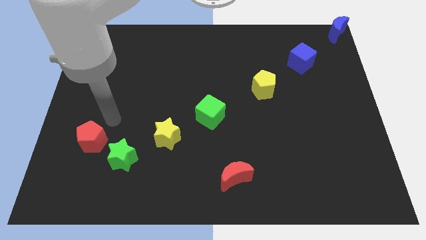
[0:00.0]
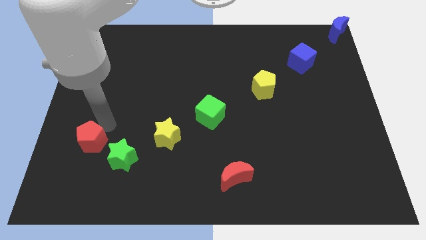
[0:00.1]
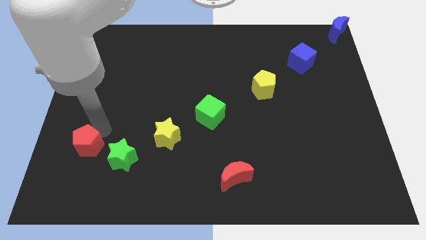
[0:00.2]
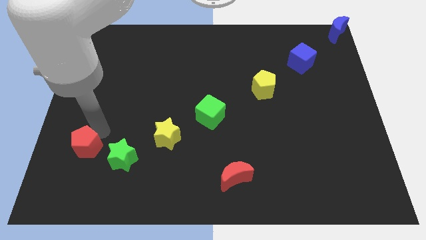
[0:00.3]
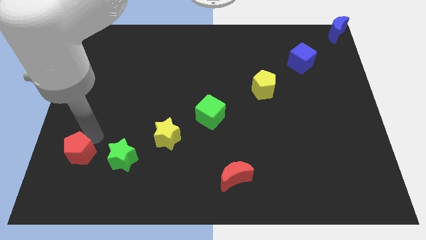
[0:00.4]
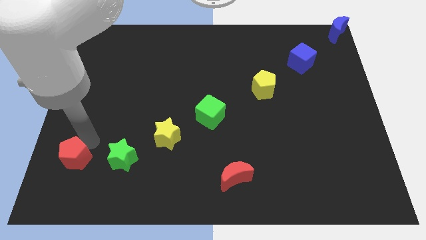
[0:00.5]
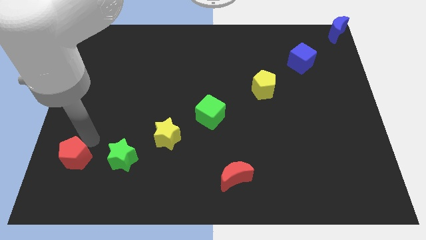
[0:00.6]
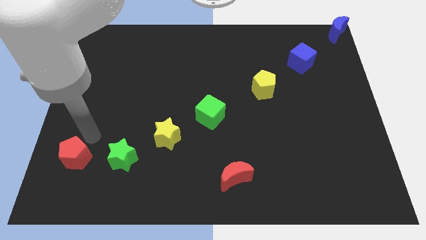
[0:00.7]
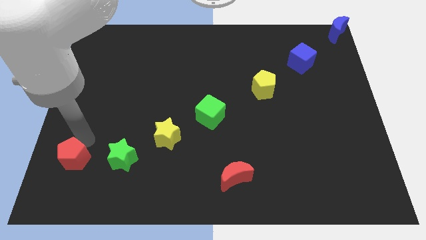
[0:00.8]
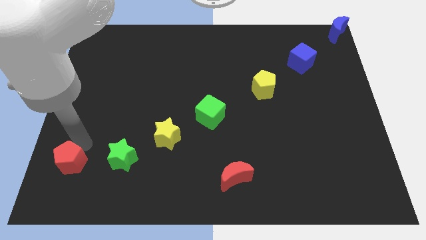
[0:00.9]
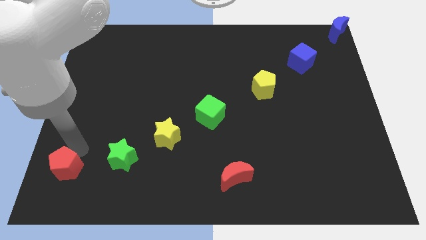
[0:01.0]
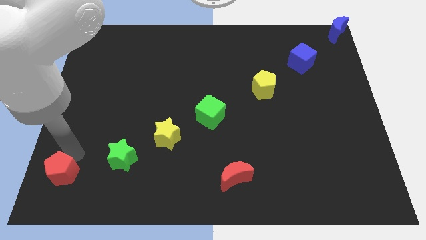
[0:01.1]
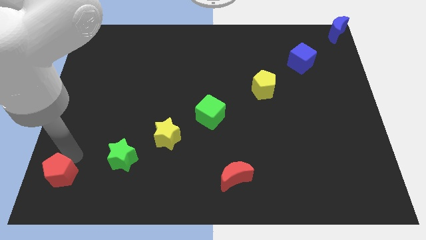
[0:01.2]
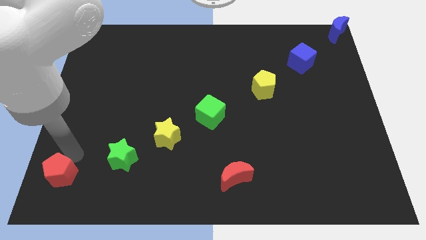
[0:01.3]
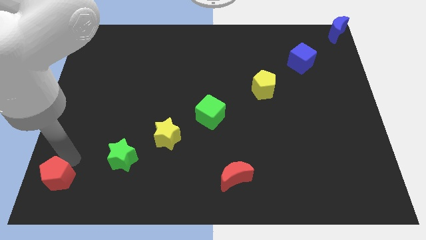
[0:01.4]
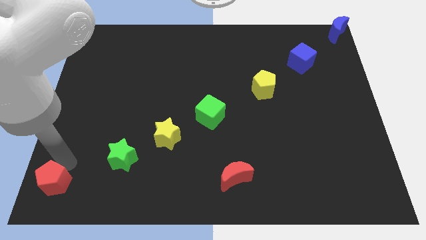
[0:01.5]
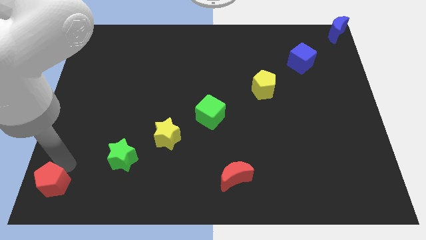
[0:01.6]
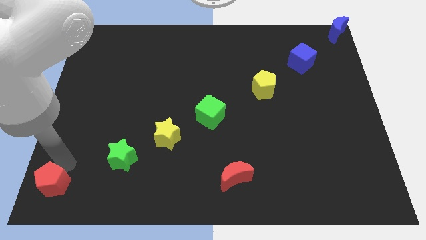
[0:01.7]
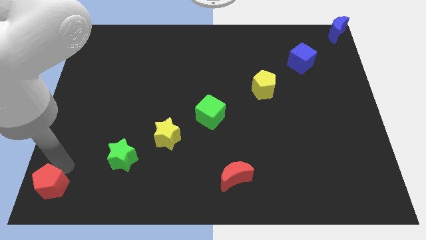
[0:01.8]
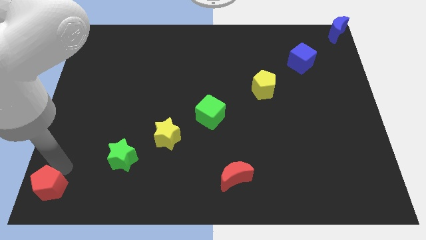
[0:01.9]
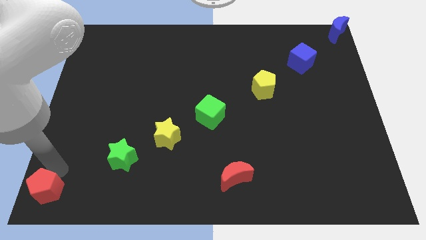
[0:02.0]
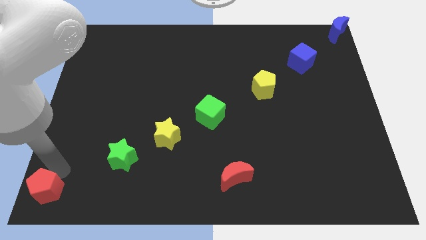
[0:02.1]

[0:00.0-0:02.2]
push the red pentagon towards the bottom left side of the board

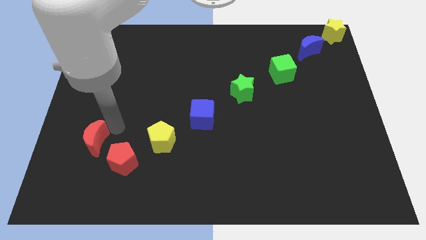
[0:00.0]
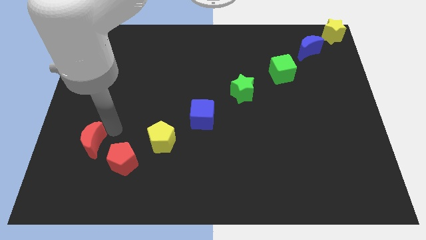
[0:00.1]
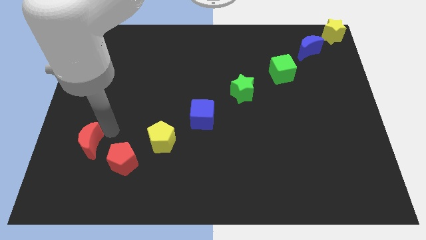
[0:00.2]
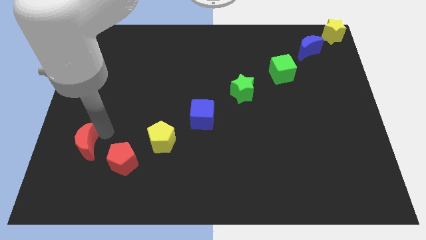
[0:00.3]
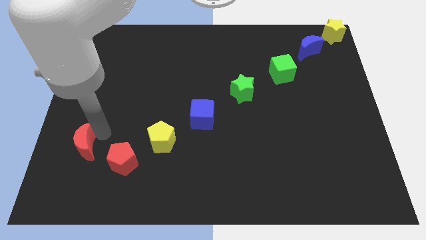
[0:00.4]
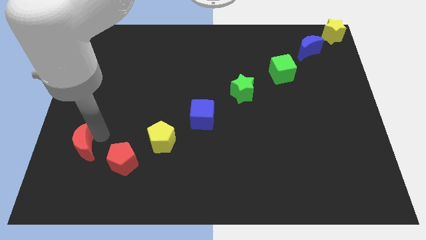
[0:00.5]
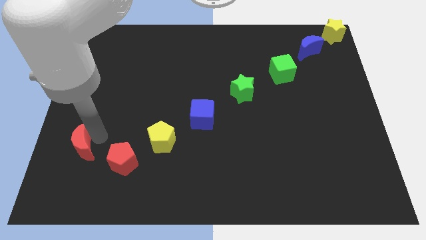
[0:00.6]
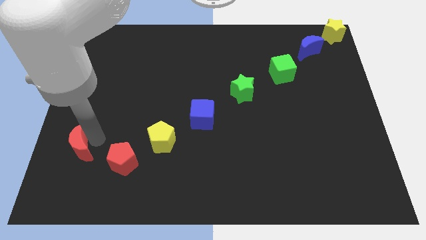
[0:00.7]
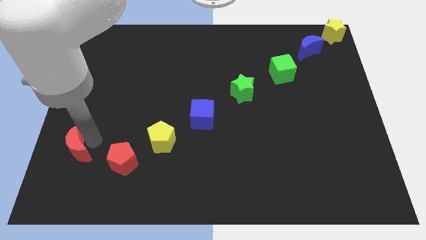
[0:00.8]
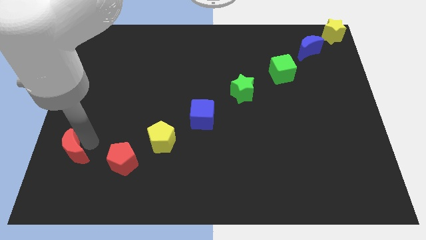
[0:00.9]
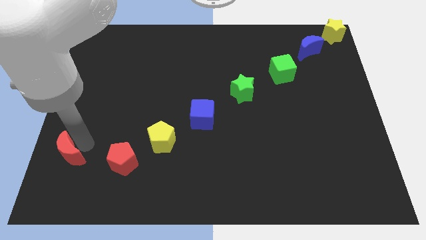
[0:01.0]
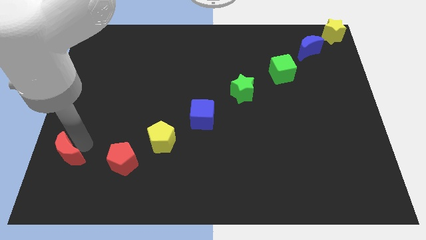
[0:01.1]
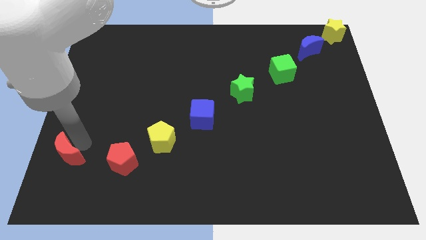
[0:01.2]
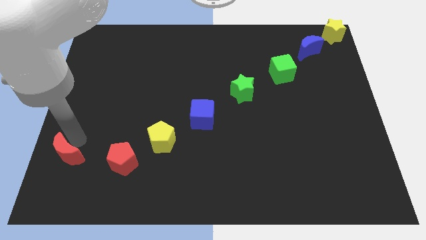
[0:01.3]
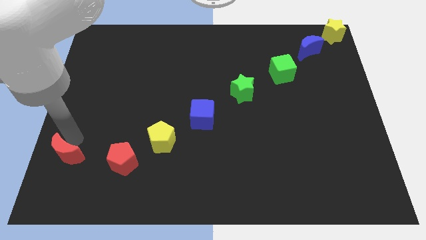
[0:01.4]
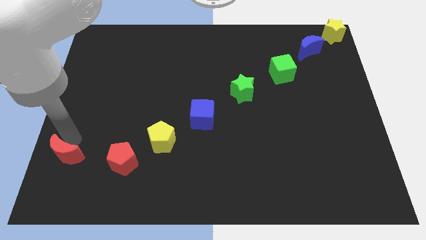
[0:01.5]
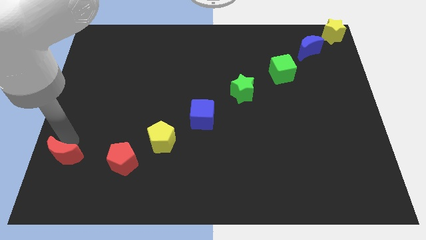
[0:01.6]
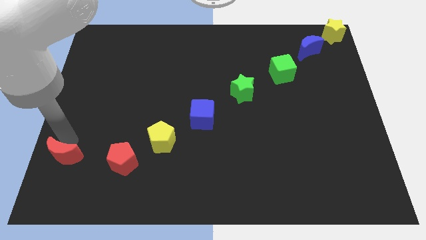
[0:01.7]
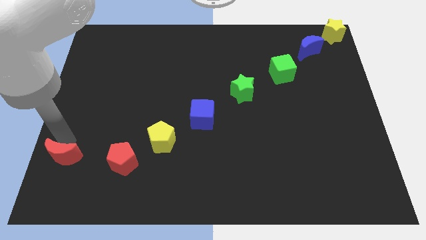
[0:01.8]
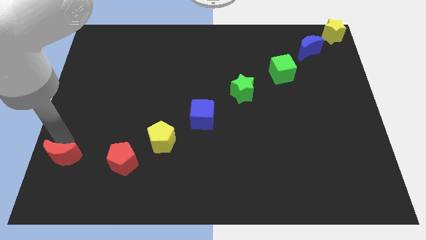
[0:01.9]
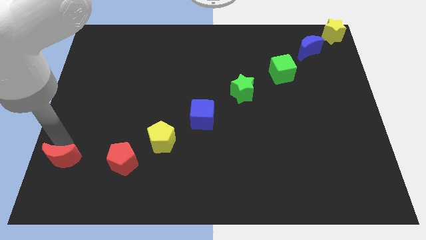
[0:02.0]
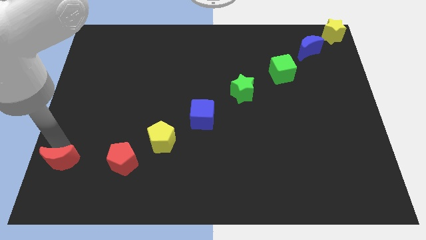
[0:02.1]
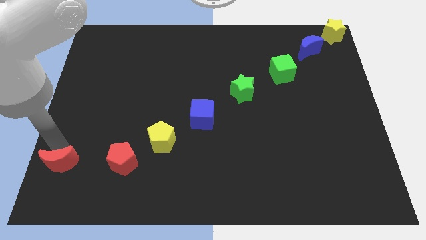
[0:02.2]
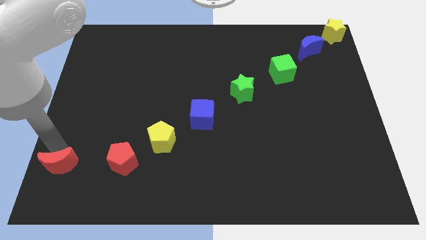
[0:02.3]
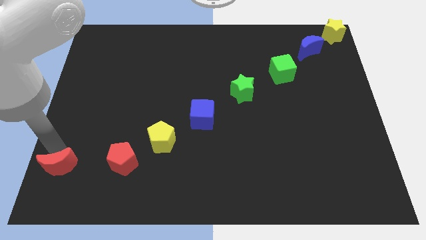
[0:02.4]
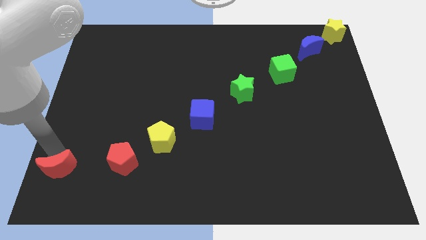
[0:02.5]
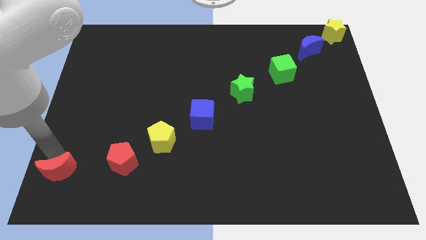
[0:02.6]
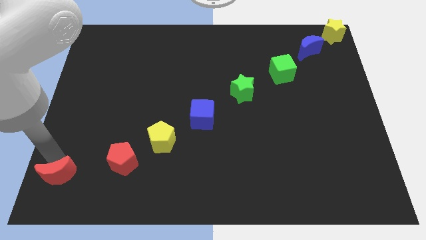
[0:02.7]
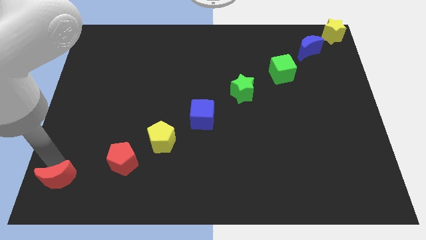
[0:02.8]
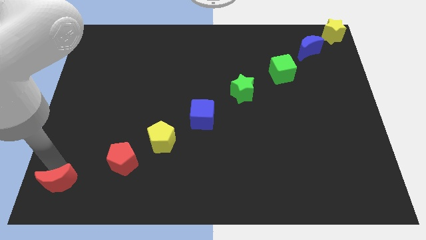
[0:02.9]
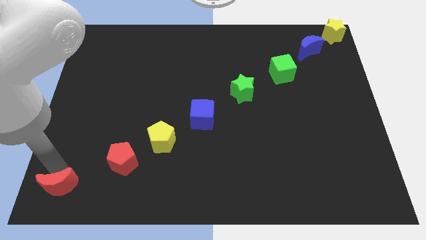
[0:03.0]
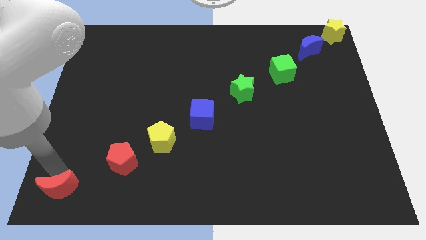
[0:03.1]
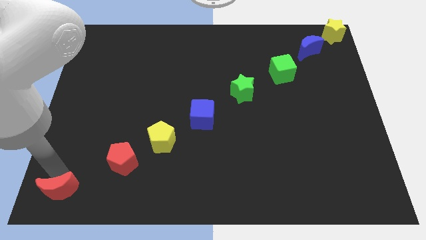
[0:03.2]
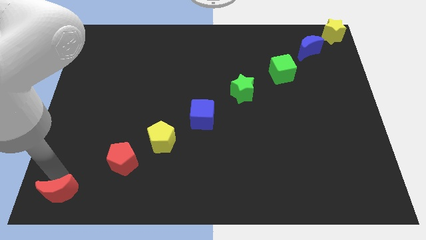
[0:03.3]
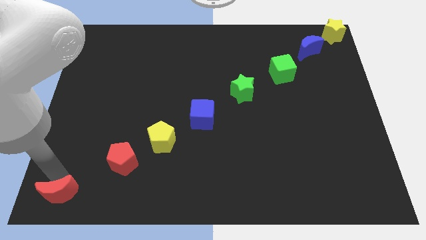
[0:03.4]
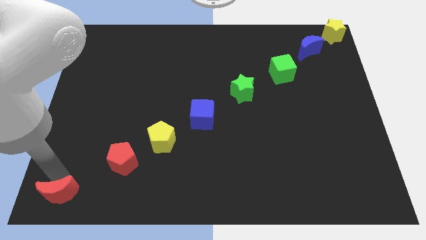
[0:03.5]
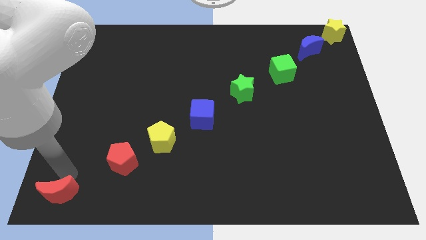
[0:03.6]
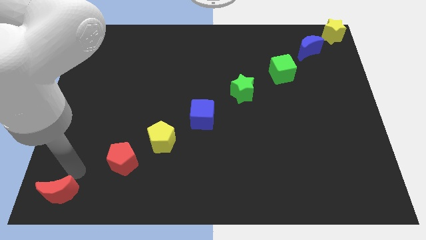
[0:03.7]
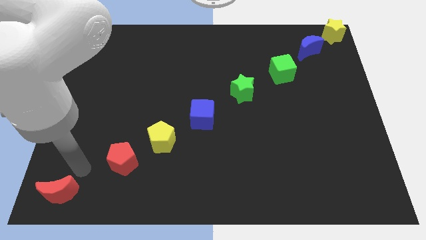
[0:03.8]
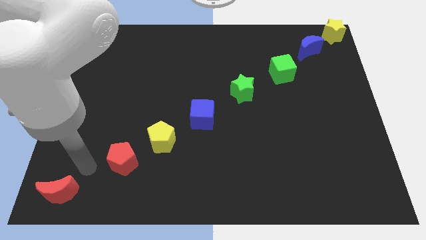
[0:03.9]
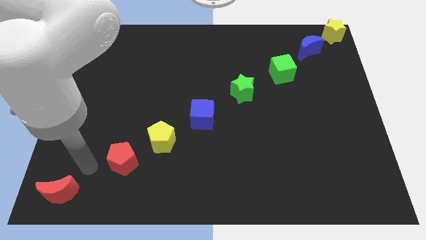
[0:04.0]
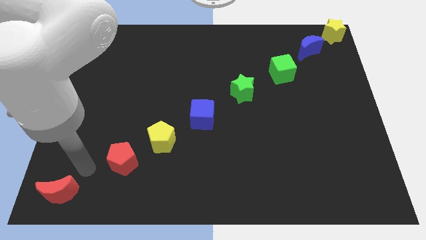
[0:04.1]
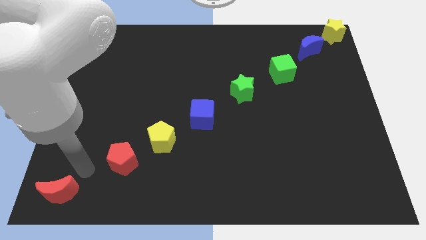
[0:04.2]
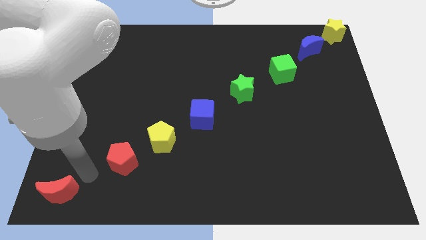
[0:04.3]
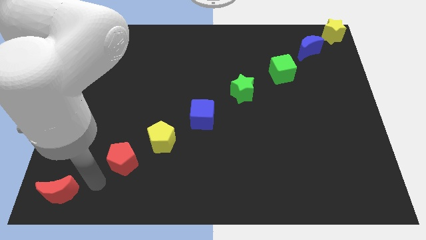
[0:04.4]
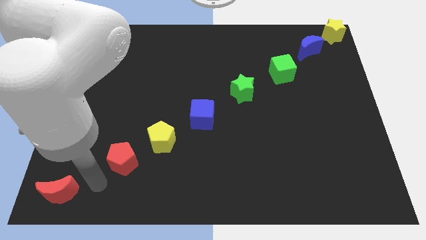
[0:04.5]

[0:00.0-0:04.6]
place red crescent diagonal to red pentagon

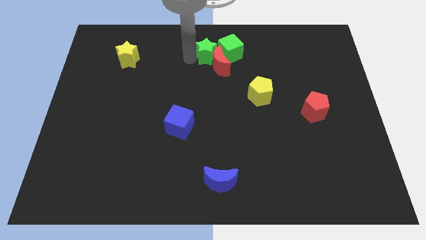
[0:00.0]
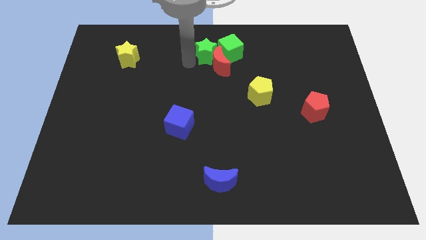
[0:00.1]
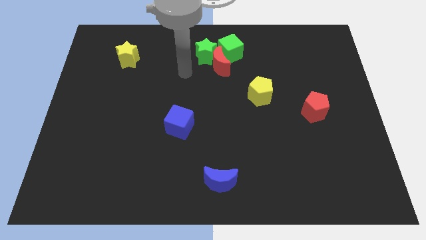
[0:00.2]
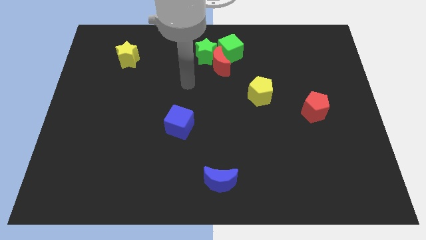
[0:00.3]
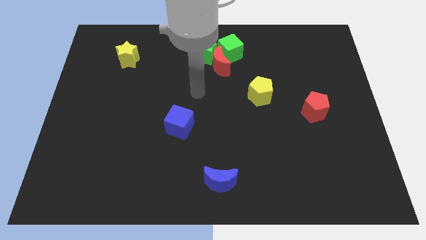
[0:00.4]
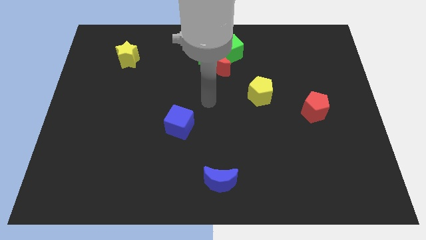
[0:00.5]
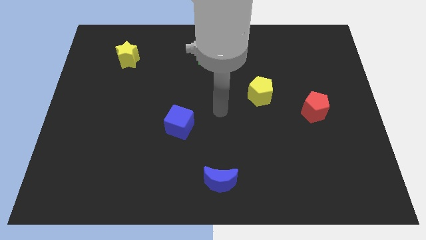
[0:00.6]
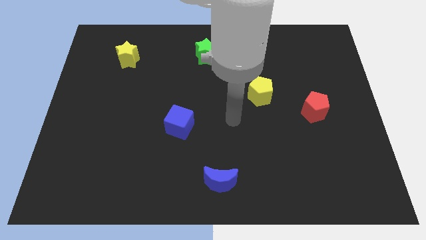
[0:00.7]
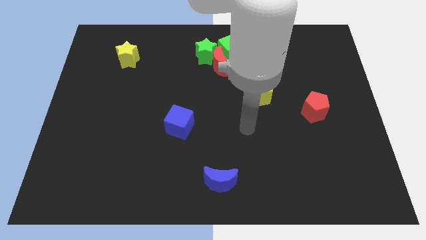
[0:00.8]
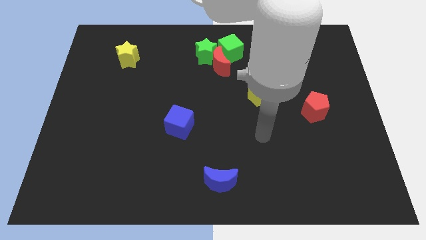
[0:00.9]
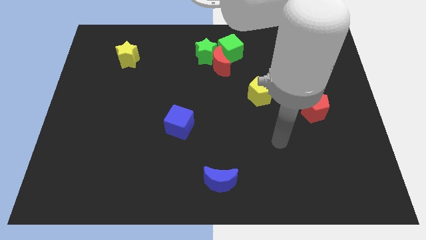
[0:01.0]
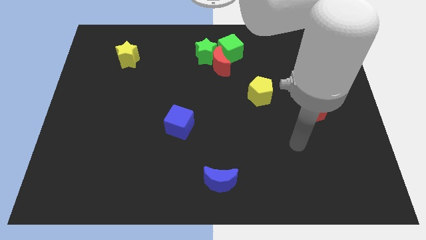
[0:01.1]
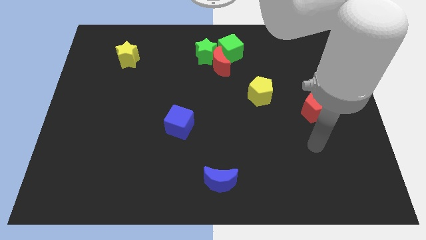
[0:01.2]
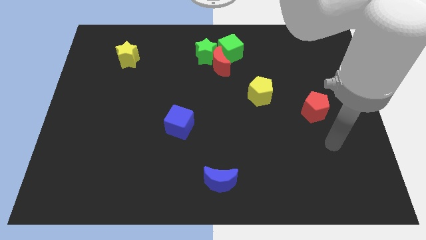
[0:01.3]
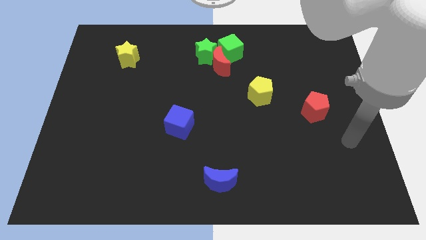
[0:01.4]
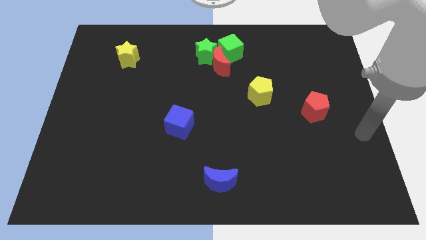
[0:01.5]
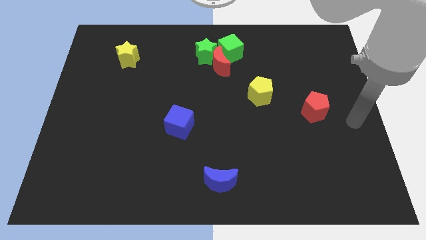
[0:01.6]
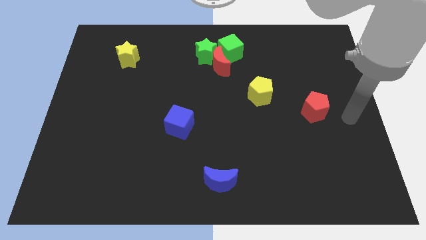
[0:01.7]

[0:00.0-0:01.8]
move around your arm on the board

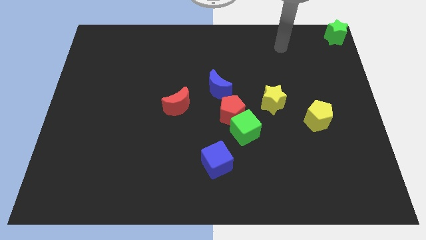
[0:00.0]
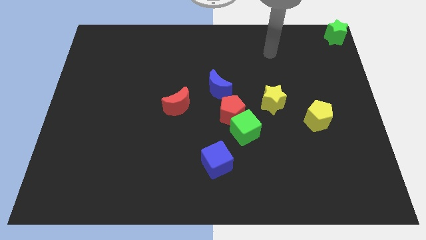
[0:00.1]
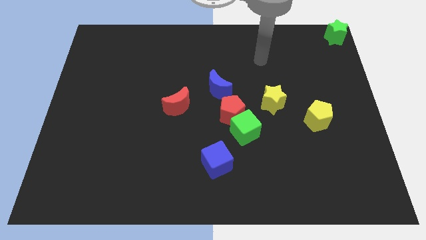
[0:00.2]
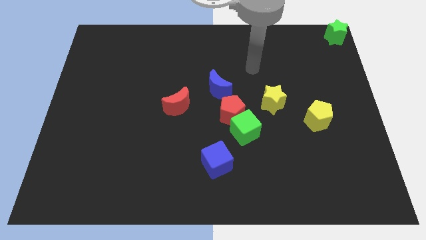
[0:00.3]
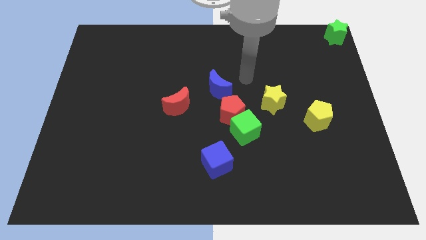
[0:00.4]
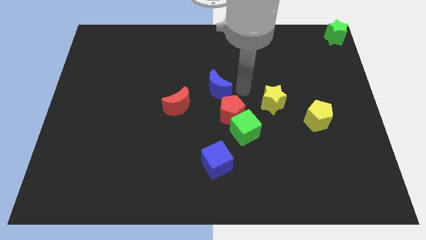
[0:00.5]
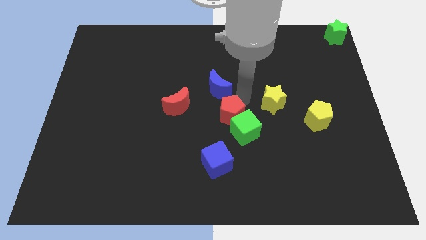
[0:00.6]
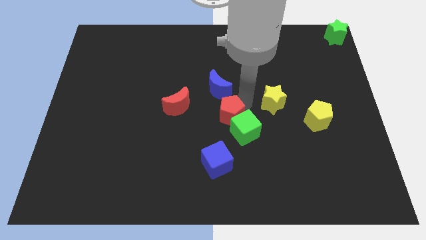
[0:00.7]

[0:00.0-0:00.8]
place the arm right to the red pentagon
